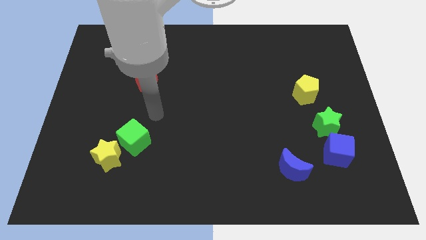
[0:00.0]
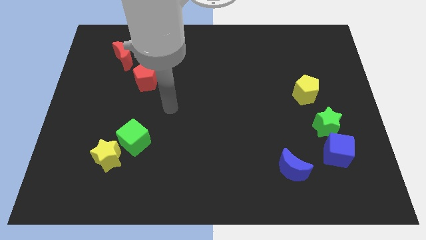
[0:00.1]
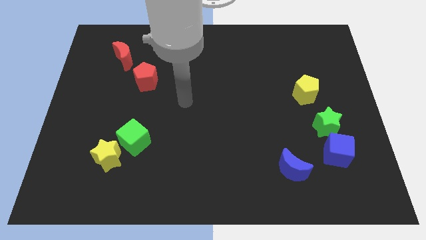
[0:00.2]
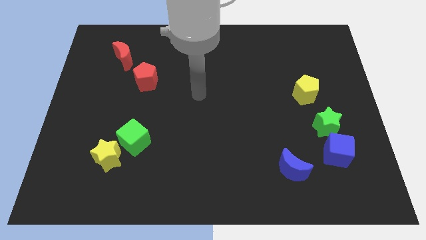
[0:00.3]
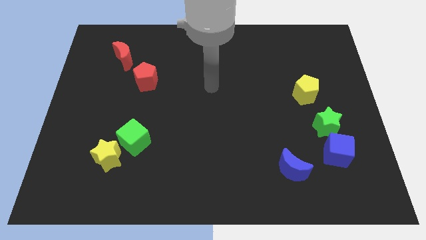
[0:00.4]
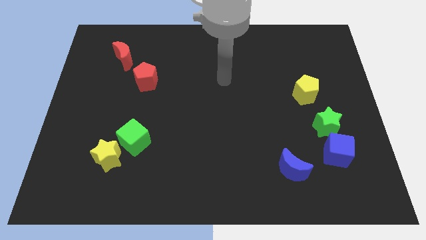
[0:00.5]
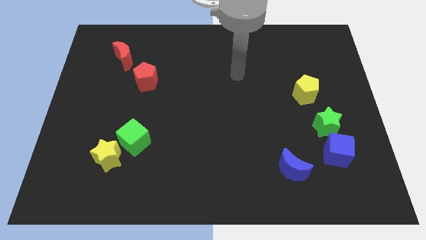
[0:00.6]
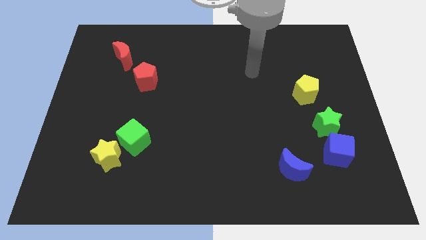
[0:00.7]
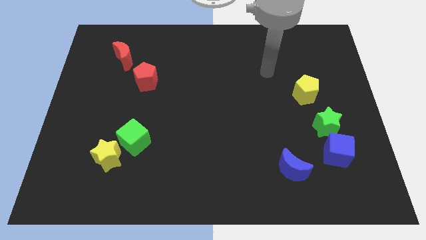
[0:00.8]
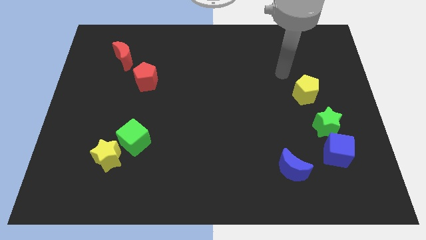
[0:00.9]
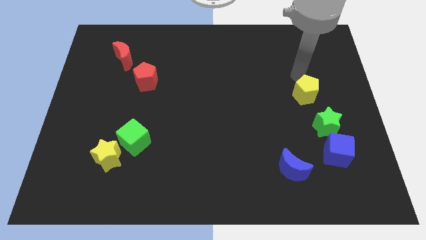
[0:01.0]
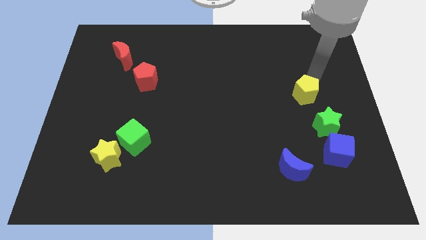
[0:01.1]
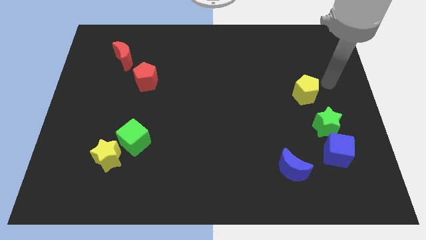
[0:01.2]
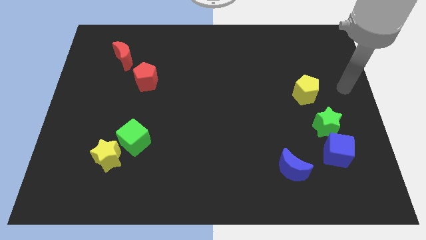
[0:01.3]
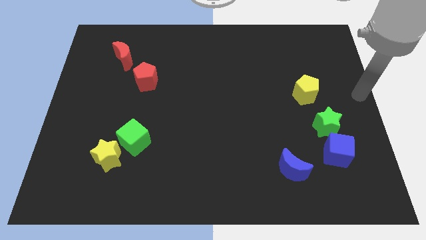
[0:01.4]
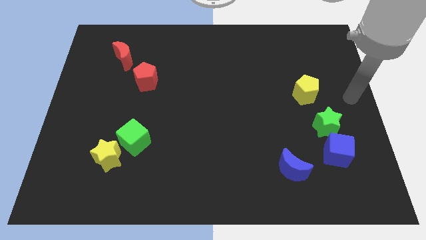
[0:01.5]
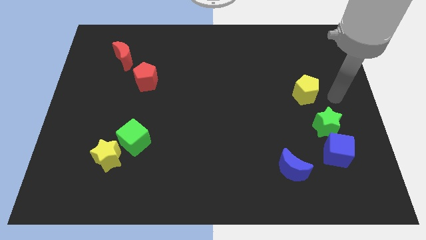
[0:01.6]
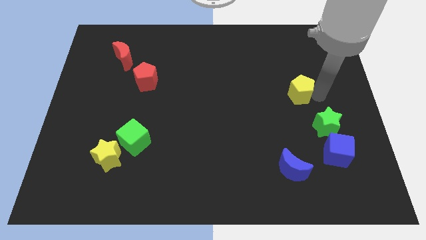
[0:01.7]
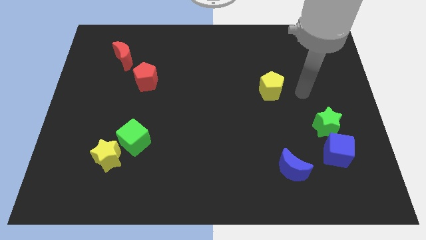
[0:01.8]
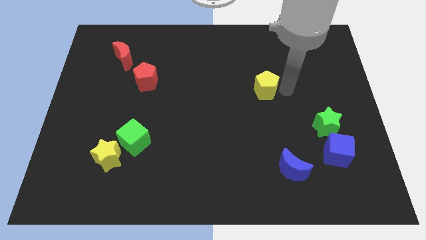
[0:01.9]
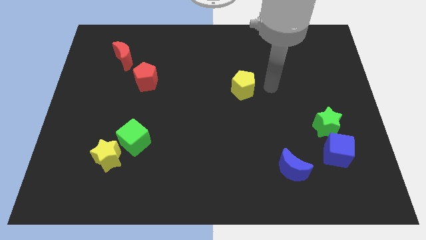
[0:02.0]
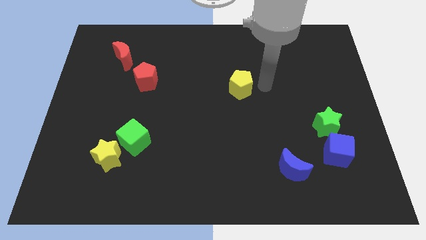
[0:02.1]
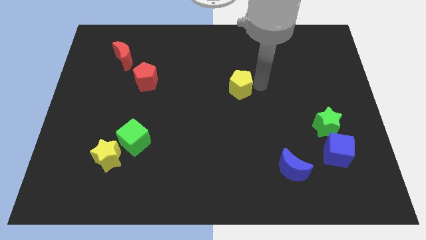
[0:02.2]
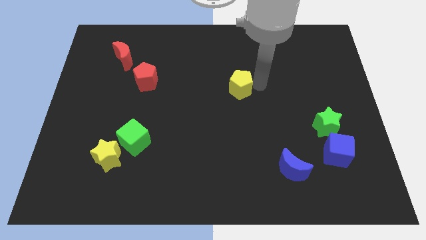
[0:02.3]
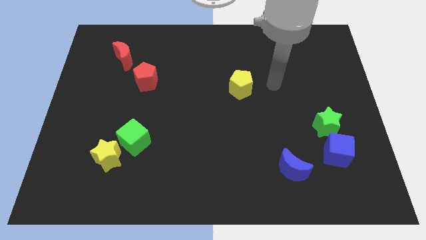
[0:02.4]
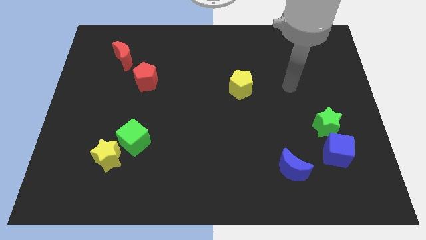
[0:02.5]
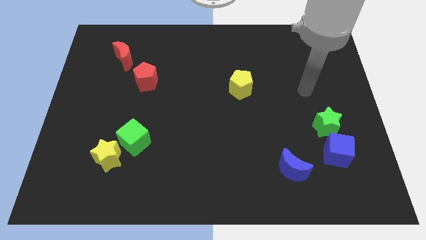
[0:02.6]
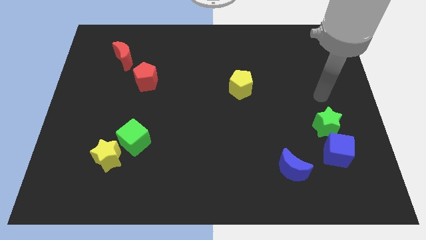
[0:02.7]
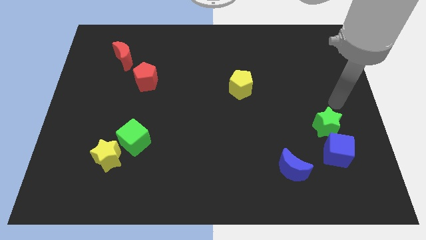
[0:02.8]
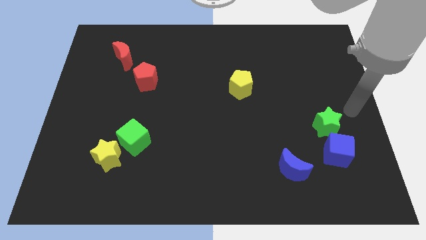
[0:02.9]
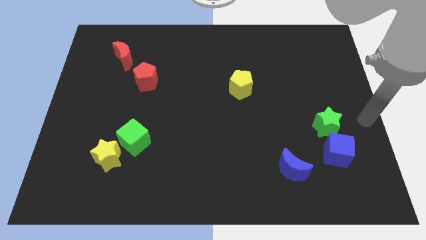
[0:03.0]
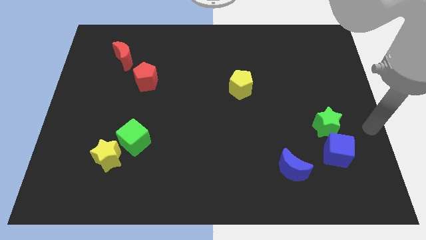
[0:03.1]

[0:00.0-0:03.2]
place the yellow pentagon diagonally on the top left side of the green star

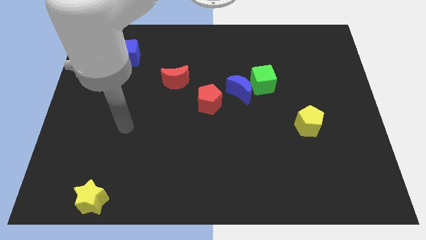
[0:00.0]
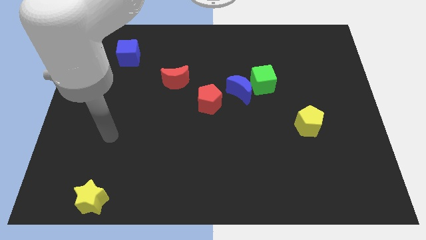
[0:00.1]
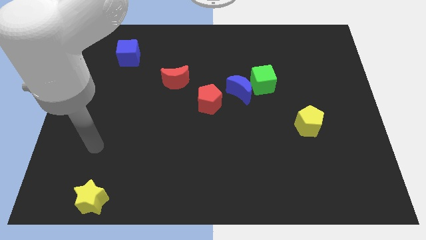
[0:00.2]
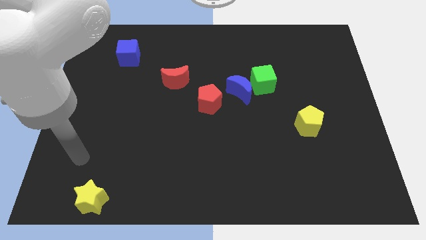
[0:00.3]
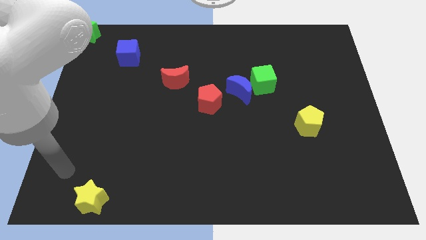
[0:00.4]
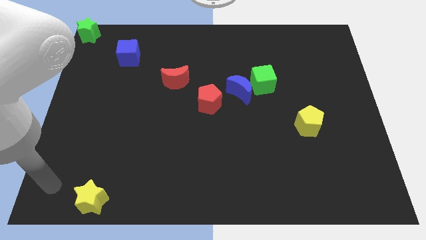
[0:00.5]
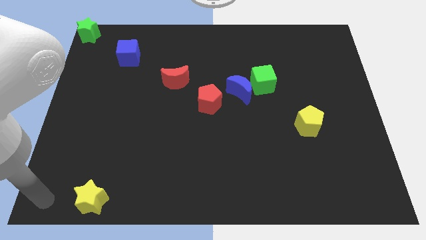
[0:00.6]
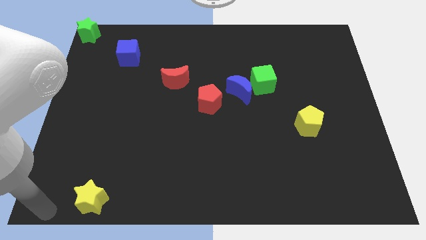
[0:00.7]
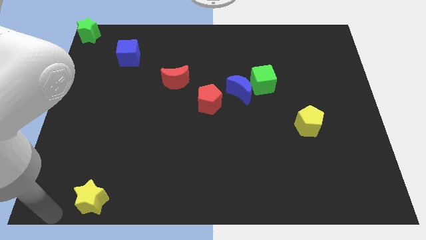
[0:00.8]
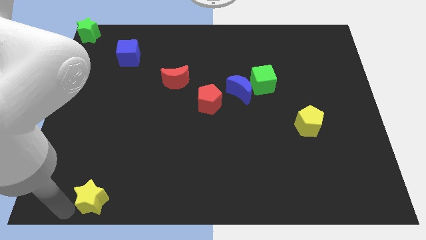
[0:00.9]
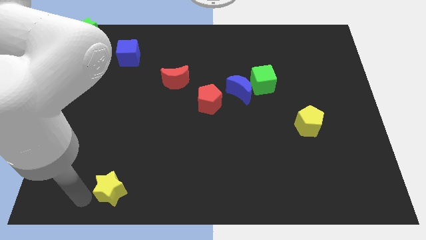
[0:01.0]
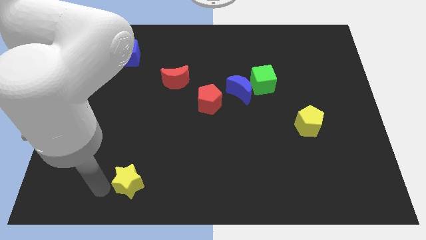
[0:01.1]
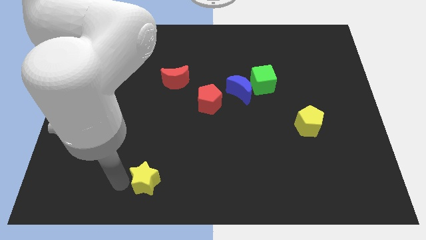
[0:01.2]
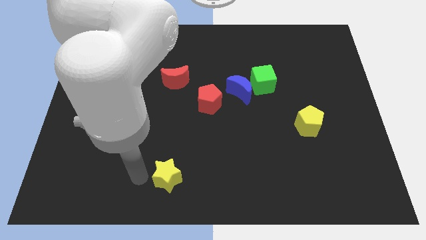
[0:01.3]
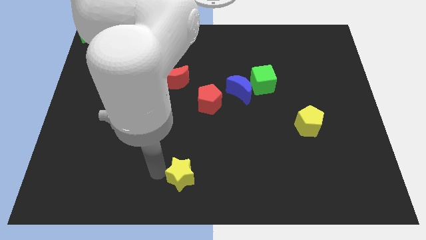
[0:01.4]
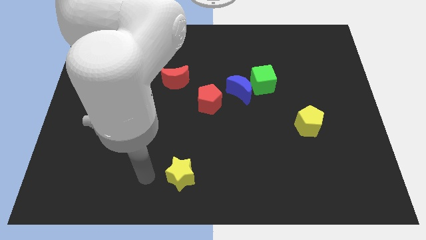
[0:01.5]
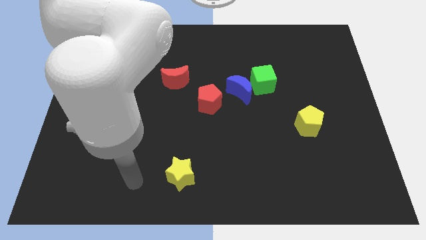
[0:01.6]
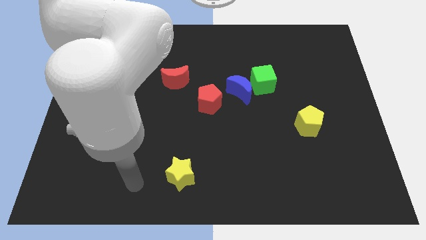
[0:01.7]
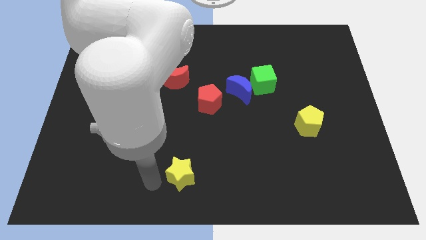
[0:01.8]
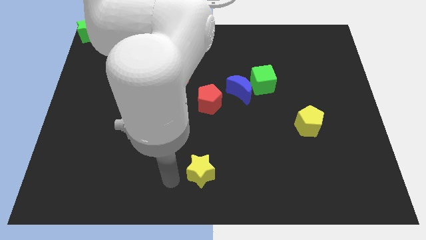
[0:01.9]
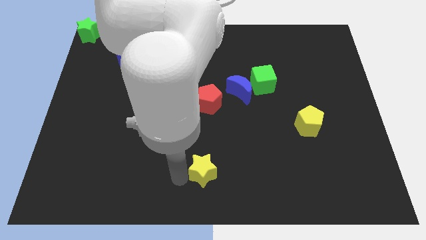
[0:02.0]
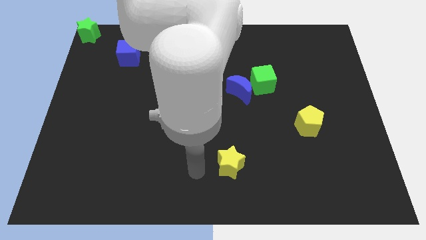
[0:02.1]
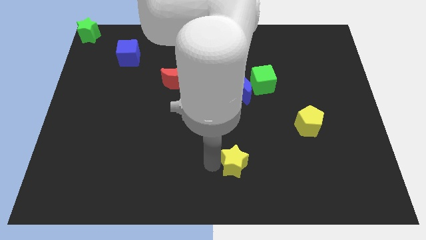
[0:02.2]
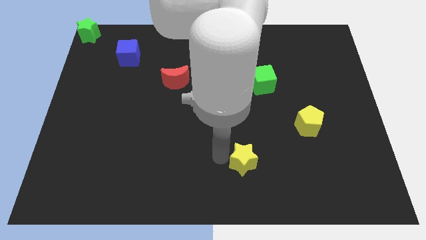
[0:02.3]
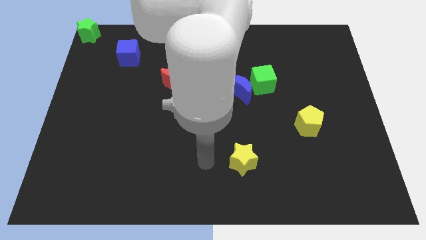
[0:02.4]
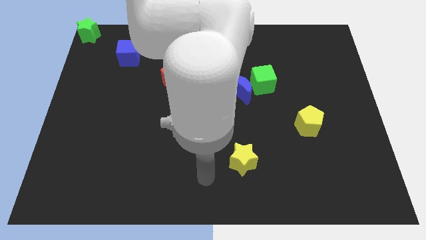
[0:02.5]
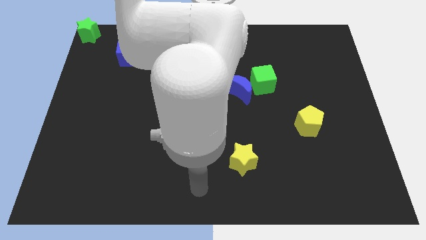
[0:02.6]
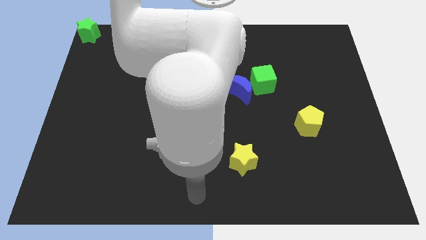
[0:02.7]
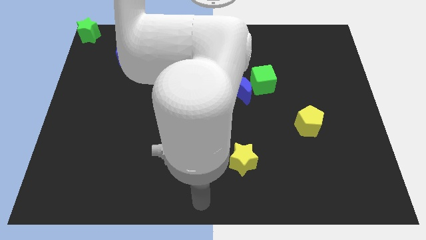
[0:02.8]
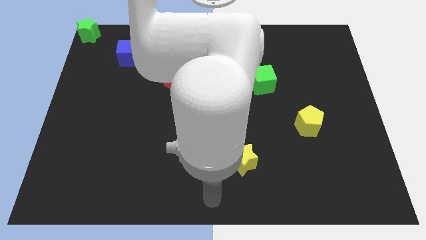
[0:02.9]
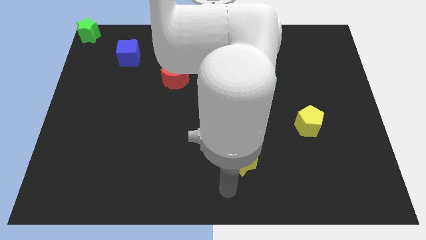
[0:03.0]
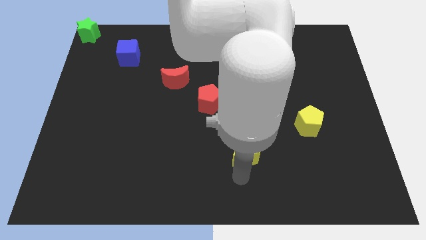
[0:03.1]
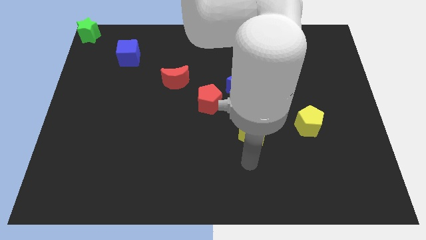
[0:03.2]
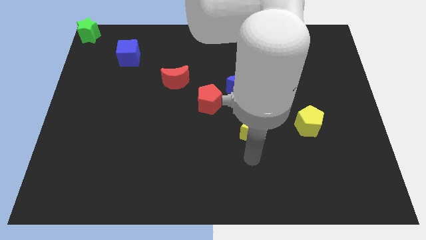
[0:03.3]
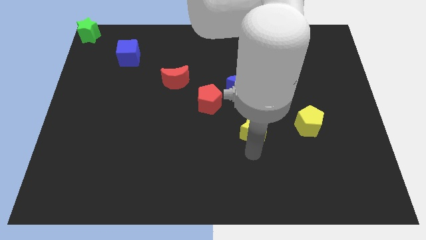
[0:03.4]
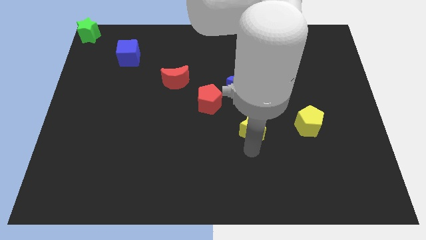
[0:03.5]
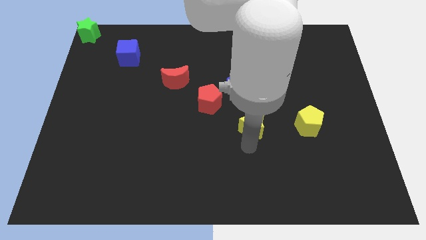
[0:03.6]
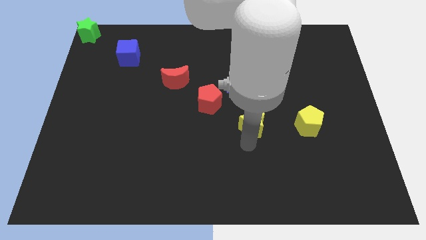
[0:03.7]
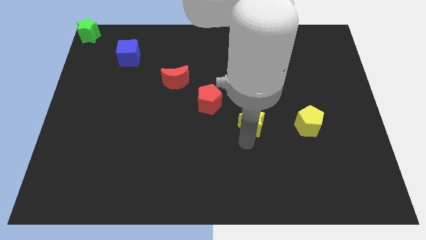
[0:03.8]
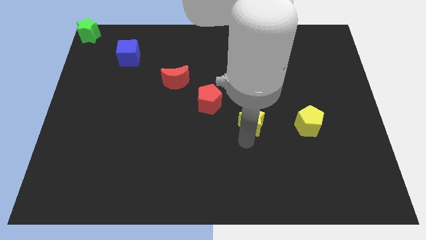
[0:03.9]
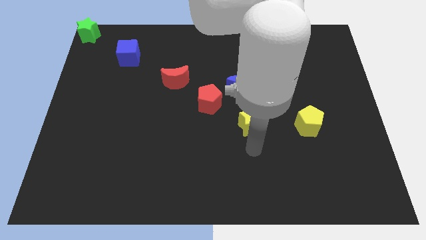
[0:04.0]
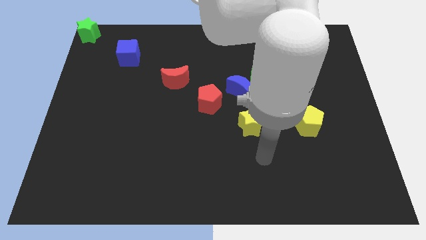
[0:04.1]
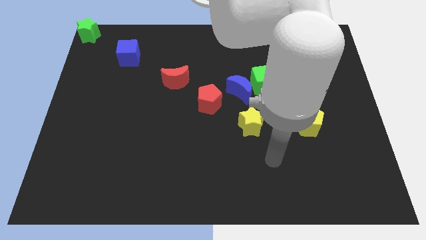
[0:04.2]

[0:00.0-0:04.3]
place the yellow star below the blue moon

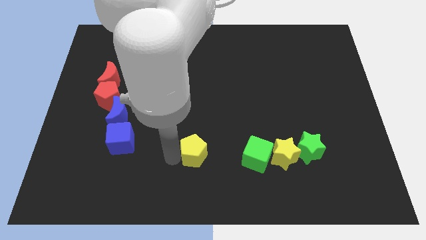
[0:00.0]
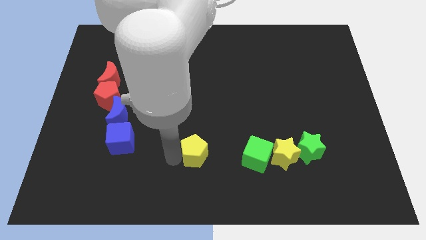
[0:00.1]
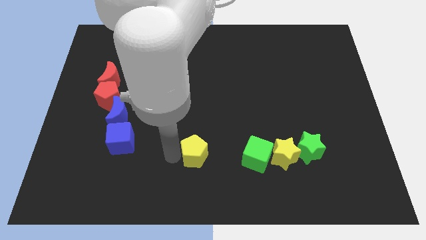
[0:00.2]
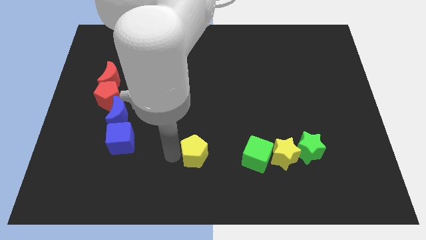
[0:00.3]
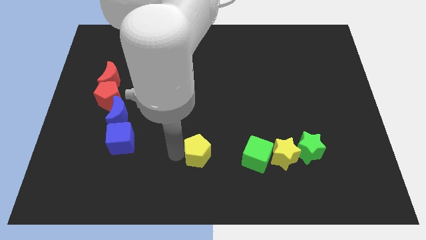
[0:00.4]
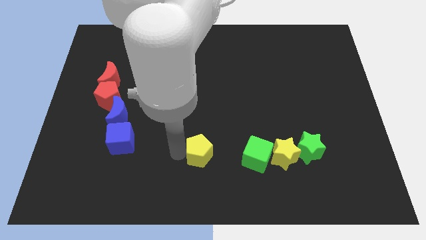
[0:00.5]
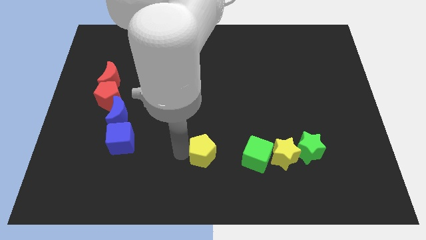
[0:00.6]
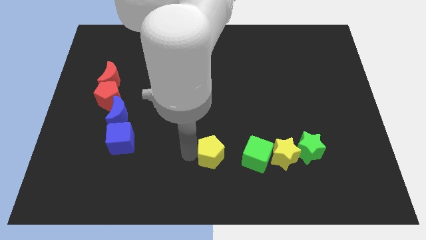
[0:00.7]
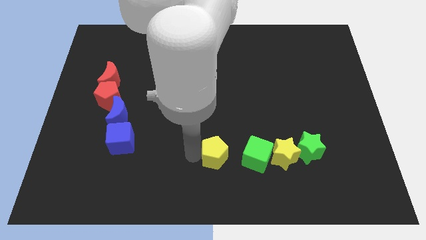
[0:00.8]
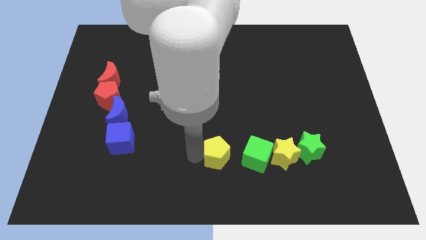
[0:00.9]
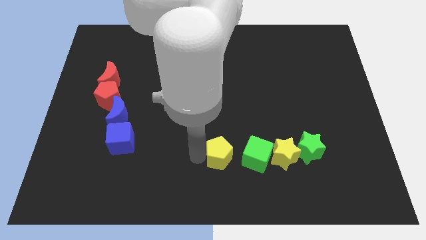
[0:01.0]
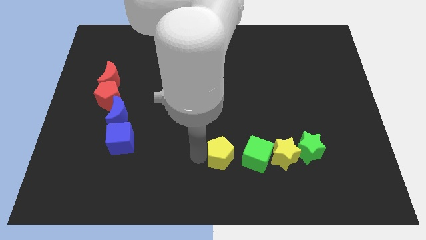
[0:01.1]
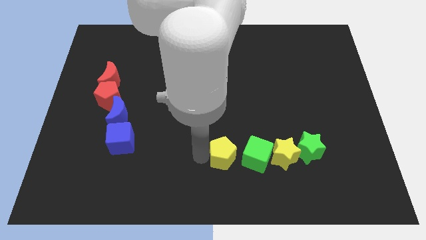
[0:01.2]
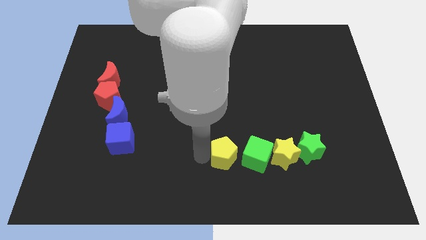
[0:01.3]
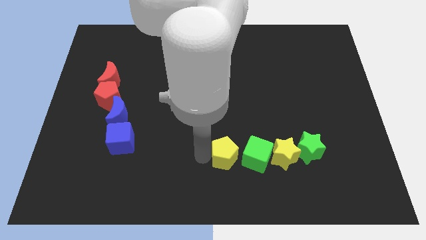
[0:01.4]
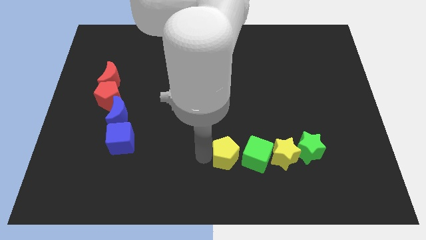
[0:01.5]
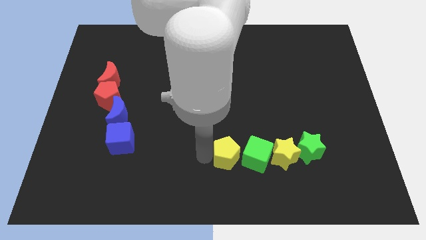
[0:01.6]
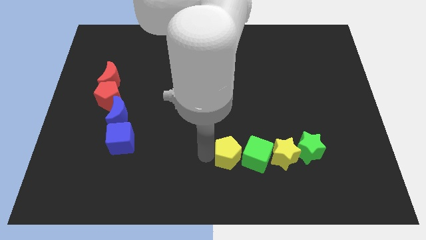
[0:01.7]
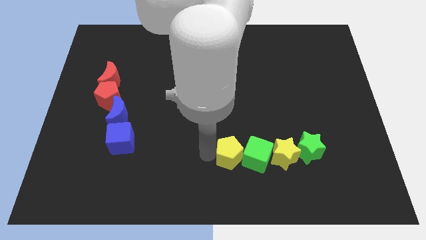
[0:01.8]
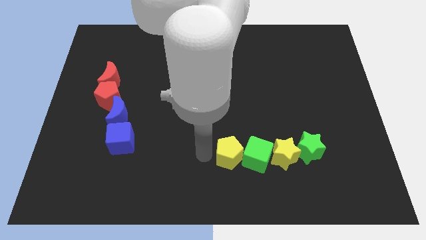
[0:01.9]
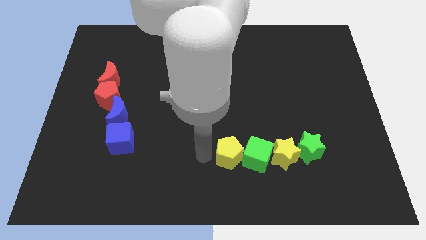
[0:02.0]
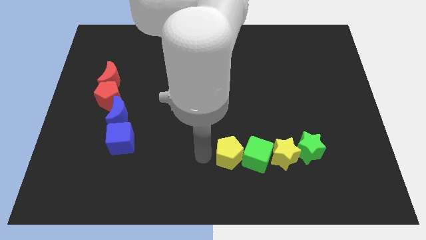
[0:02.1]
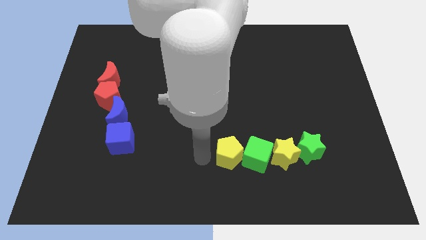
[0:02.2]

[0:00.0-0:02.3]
push the yellow pentagon into the green cube
